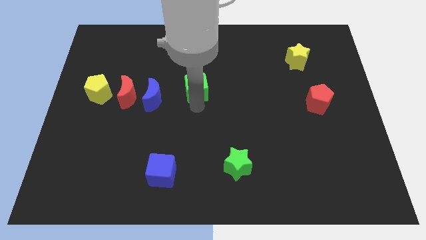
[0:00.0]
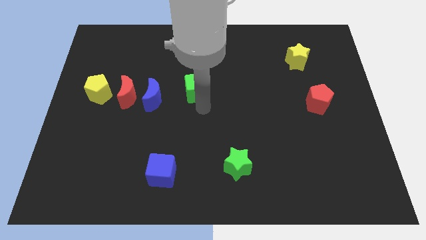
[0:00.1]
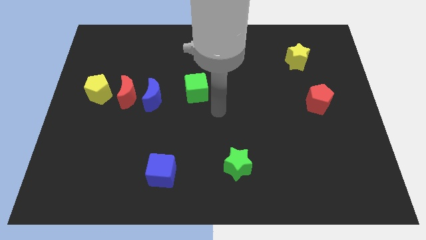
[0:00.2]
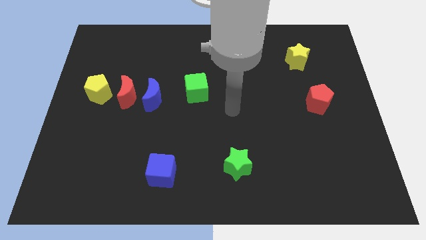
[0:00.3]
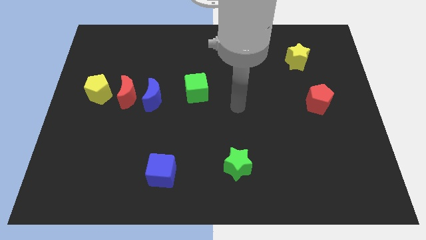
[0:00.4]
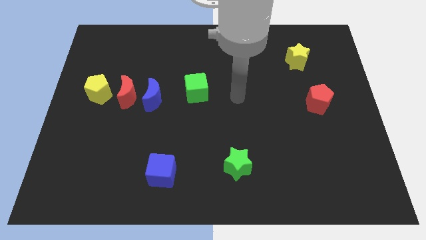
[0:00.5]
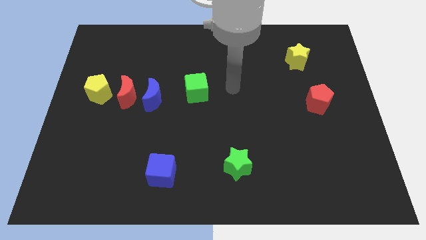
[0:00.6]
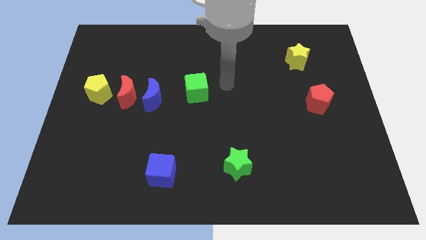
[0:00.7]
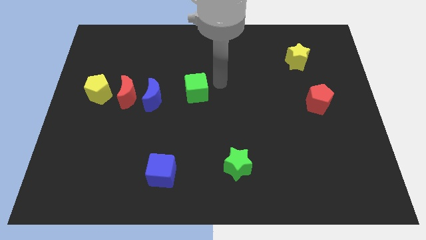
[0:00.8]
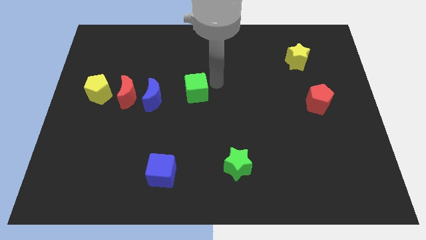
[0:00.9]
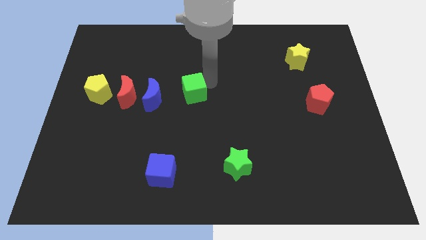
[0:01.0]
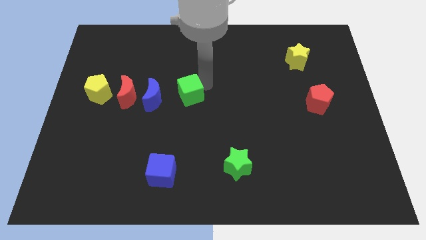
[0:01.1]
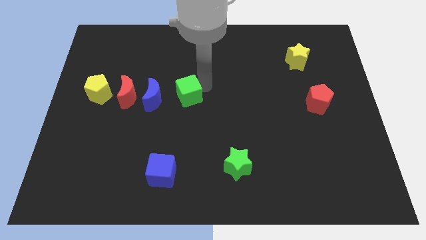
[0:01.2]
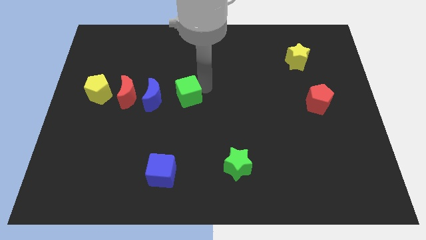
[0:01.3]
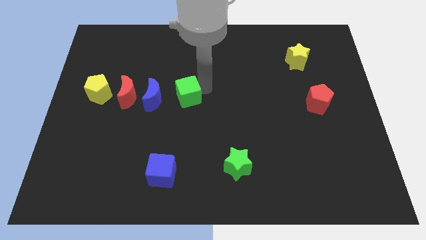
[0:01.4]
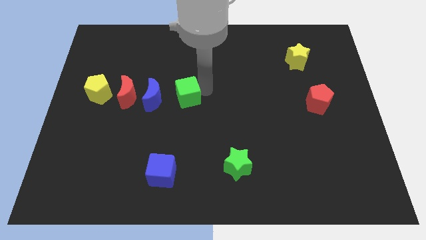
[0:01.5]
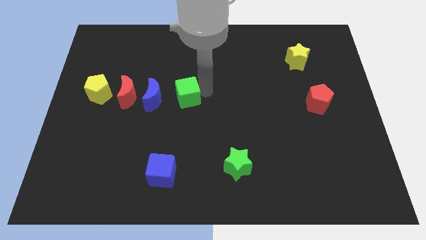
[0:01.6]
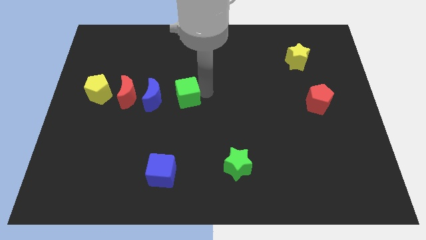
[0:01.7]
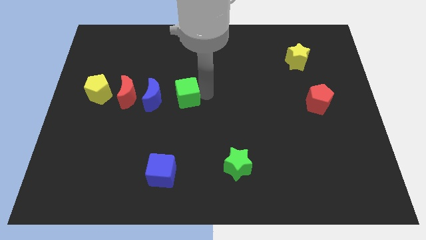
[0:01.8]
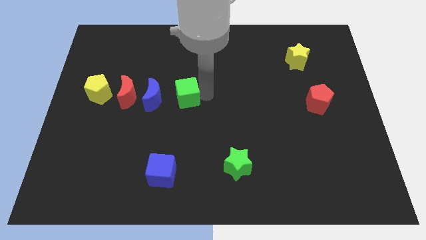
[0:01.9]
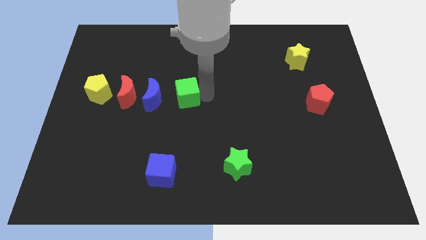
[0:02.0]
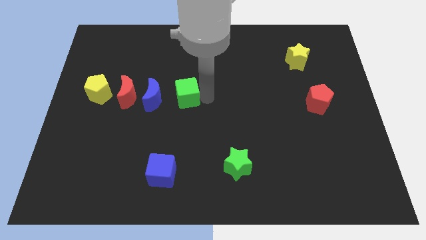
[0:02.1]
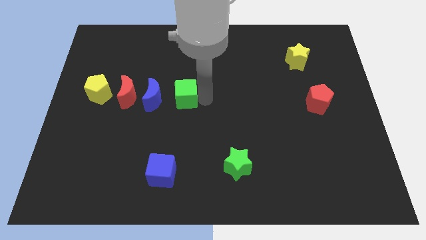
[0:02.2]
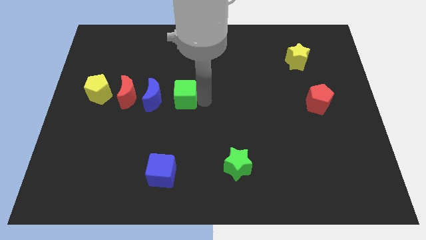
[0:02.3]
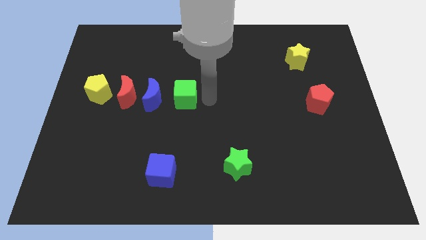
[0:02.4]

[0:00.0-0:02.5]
place green cube to the right of blue crescent

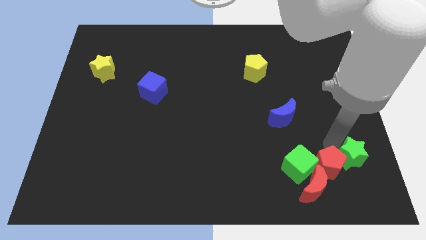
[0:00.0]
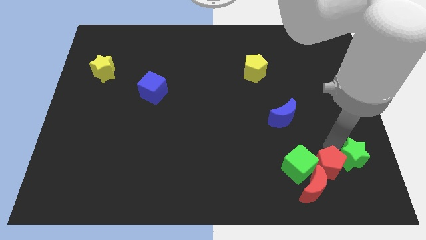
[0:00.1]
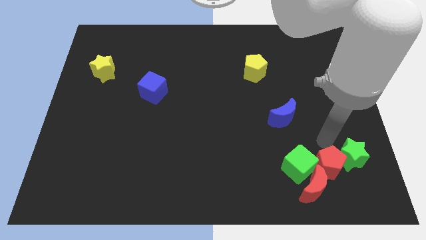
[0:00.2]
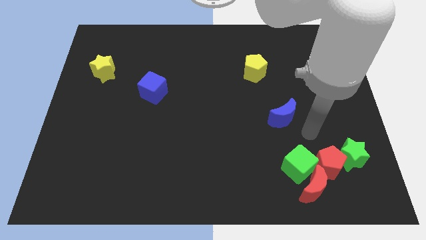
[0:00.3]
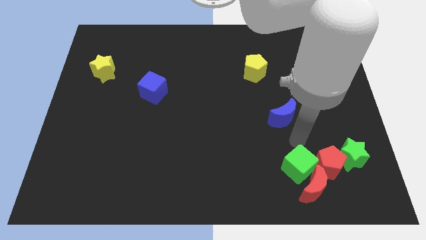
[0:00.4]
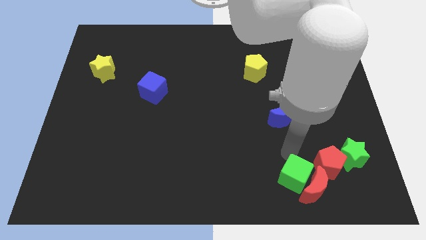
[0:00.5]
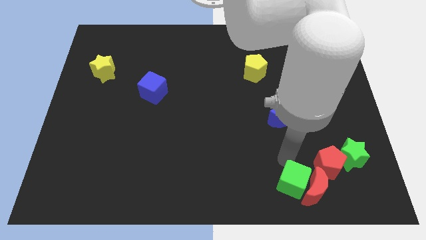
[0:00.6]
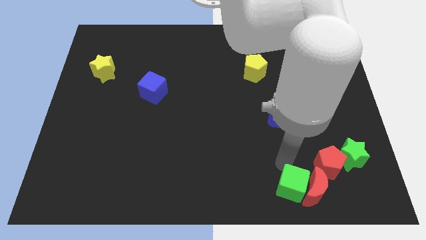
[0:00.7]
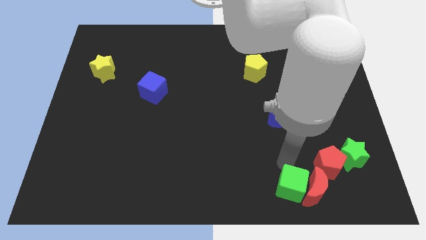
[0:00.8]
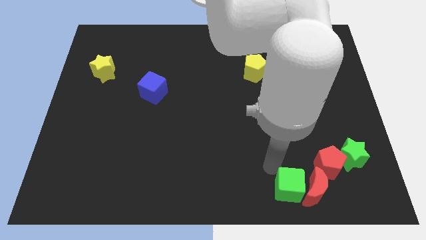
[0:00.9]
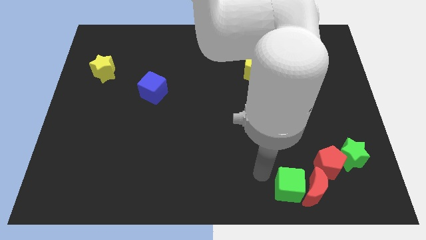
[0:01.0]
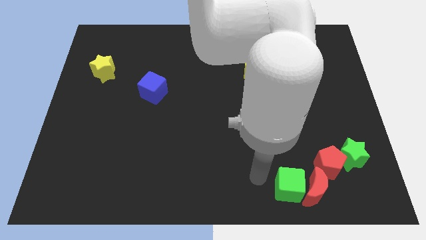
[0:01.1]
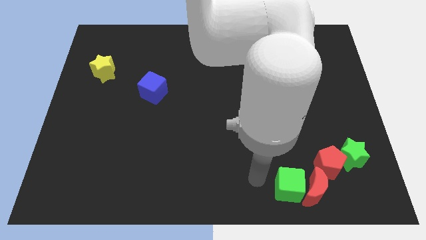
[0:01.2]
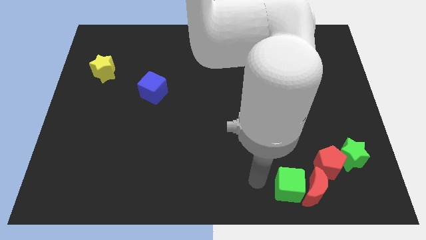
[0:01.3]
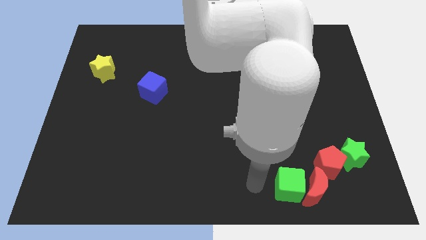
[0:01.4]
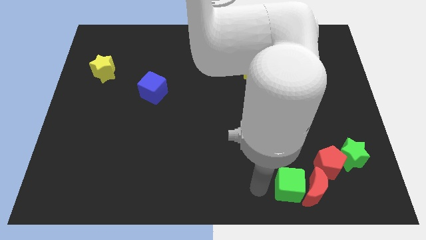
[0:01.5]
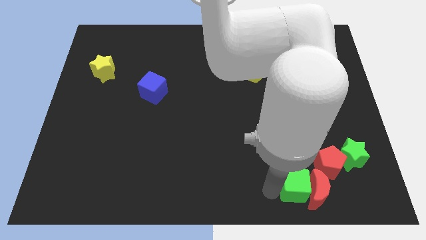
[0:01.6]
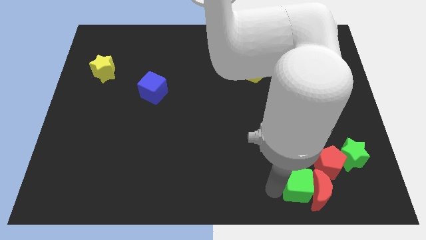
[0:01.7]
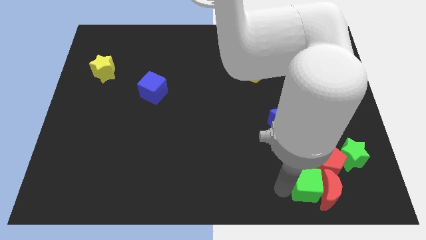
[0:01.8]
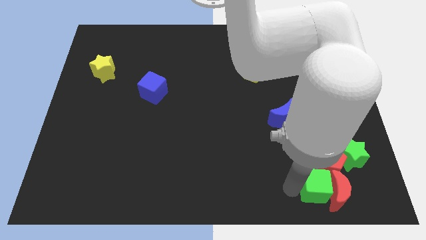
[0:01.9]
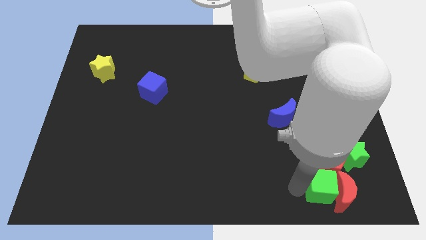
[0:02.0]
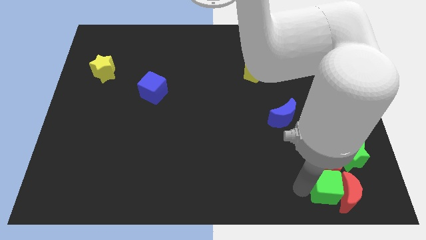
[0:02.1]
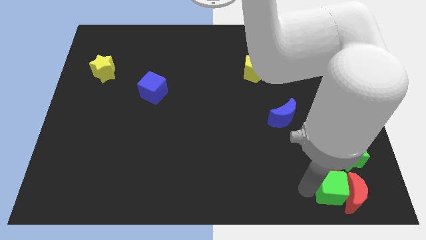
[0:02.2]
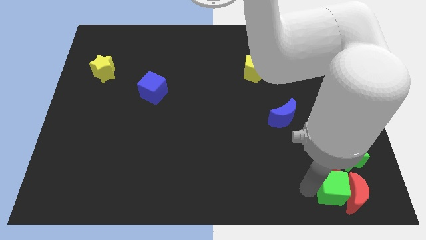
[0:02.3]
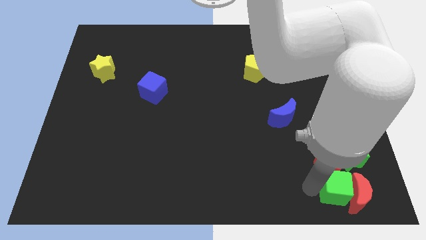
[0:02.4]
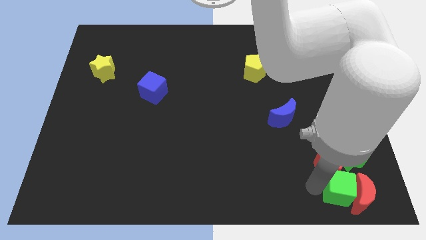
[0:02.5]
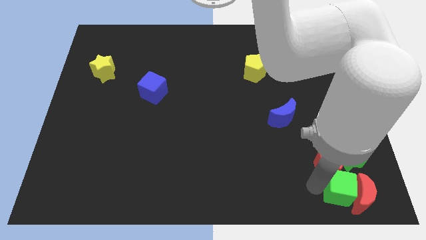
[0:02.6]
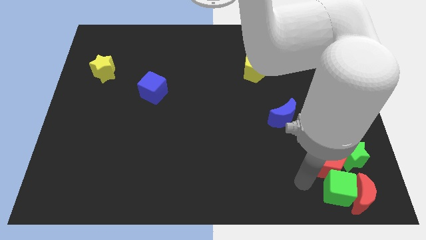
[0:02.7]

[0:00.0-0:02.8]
put the green cube and red crescent below the red pentagon and green star

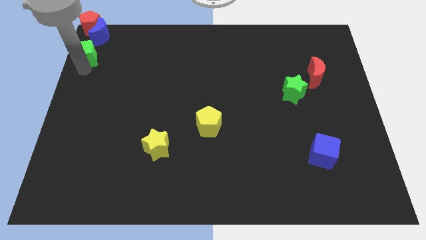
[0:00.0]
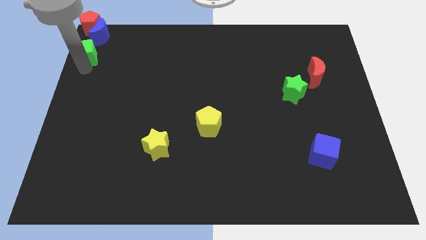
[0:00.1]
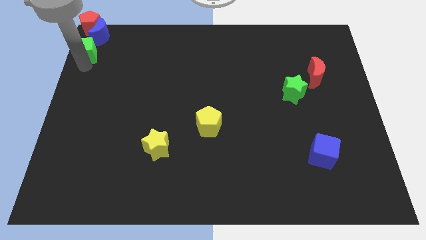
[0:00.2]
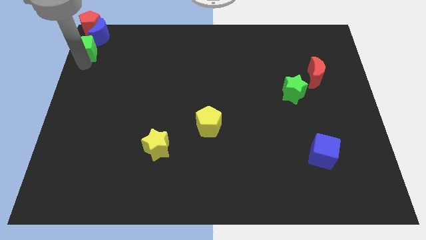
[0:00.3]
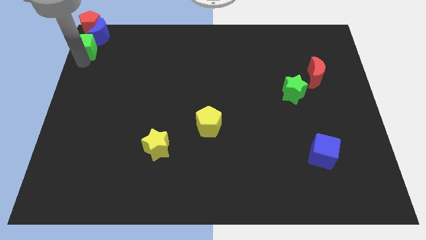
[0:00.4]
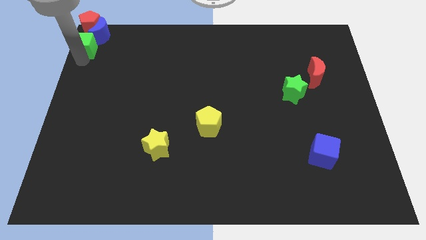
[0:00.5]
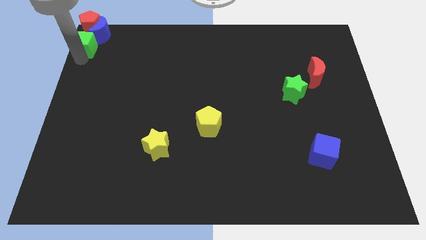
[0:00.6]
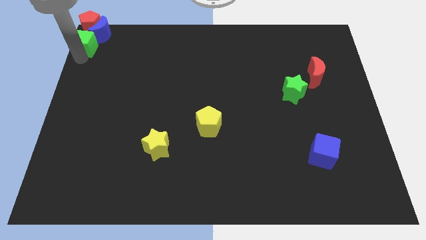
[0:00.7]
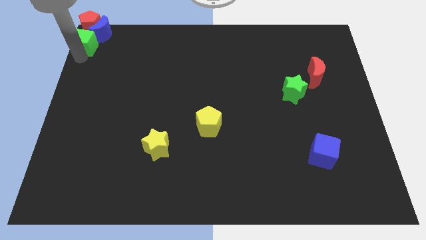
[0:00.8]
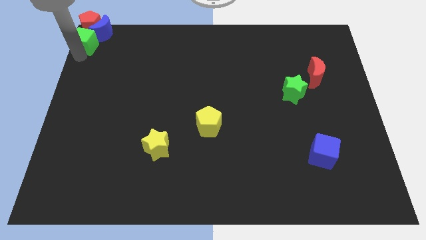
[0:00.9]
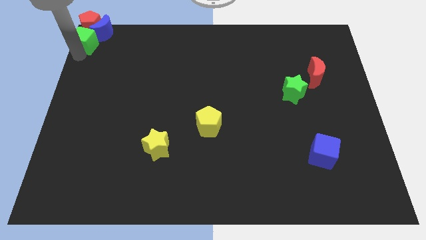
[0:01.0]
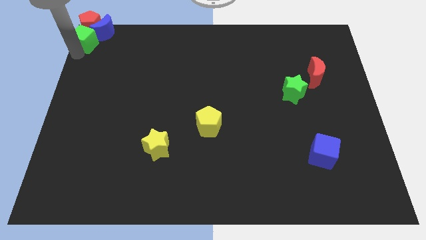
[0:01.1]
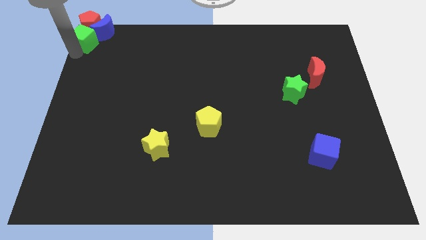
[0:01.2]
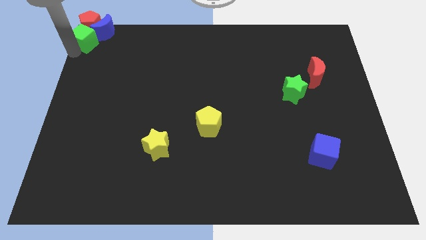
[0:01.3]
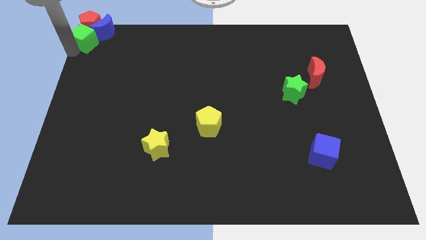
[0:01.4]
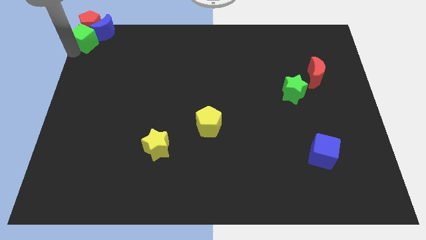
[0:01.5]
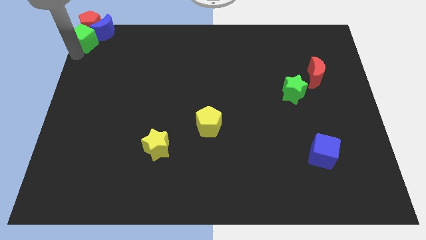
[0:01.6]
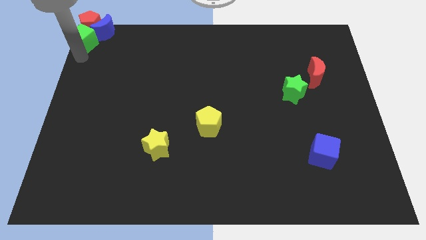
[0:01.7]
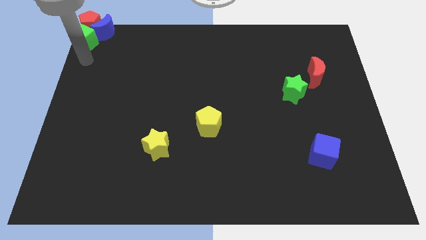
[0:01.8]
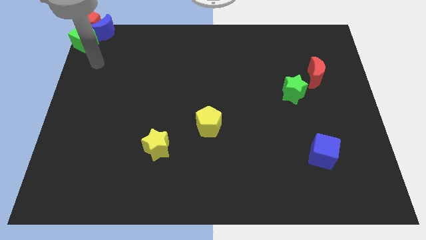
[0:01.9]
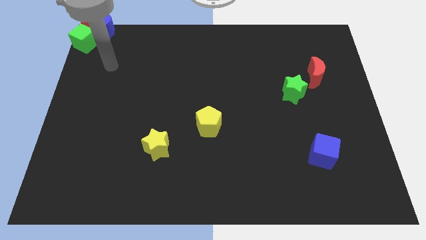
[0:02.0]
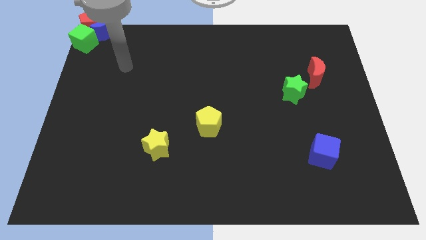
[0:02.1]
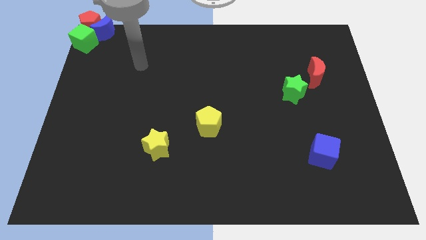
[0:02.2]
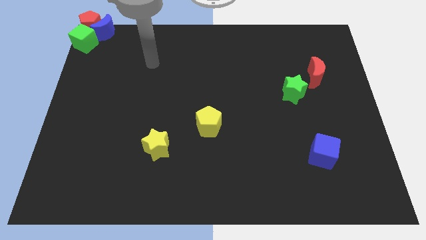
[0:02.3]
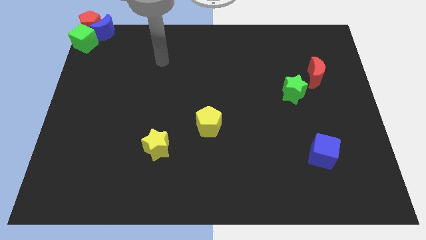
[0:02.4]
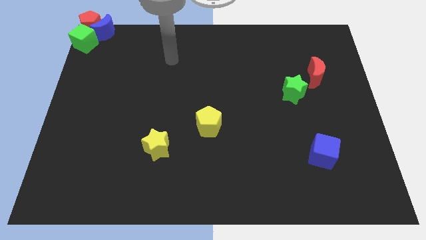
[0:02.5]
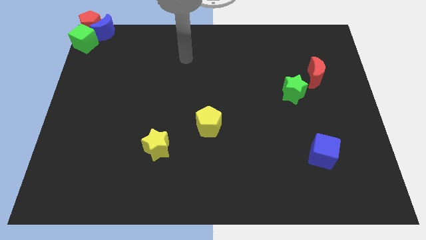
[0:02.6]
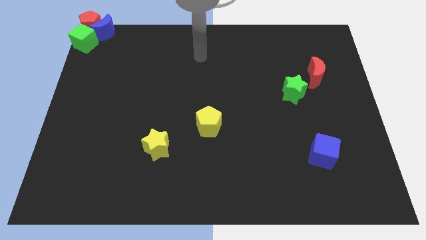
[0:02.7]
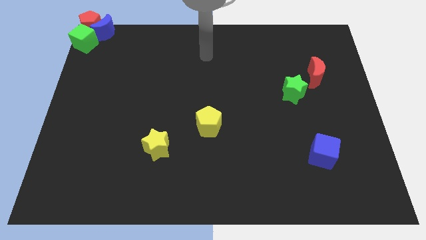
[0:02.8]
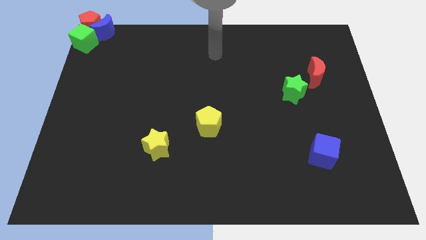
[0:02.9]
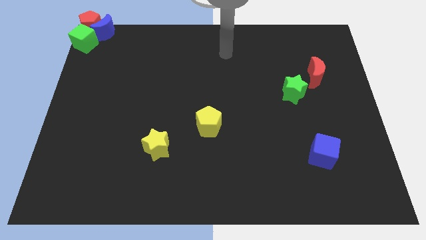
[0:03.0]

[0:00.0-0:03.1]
move the arm at the top center

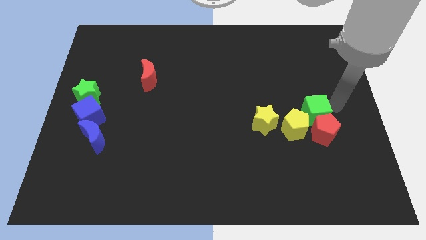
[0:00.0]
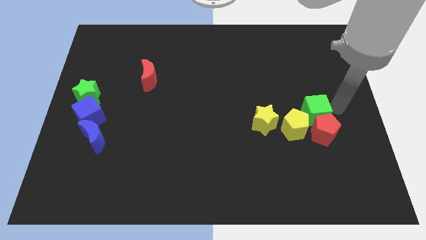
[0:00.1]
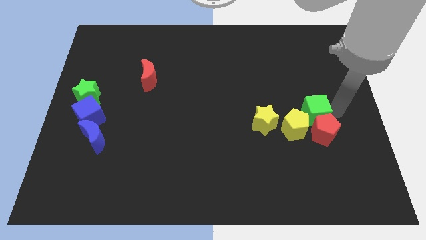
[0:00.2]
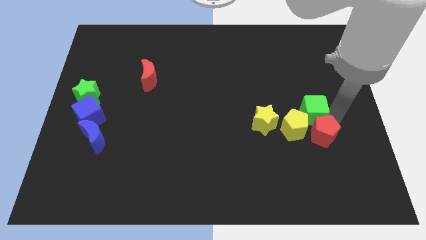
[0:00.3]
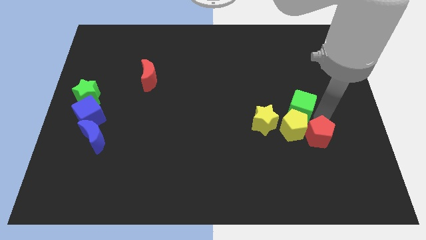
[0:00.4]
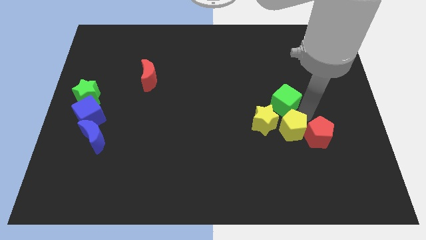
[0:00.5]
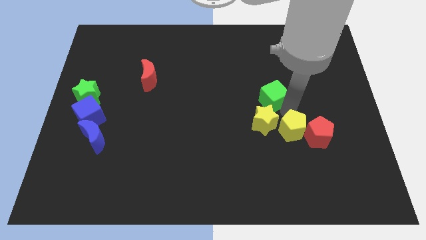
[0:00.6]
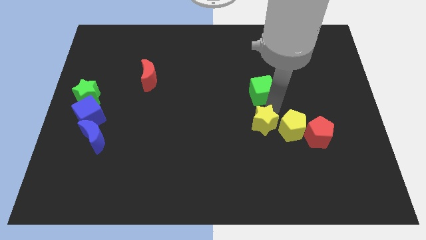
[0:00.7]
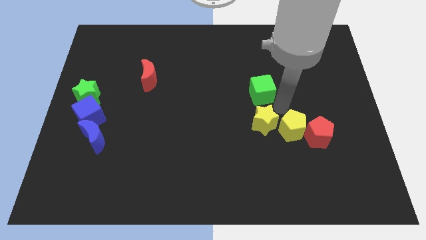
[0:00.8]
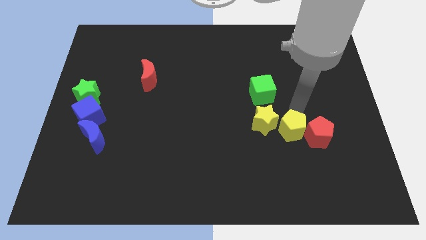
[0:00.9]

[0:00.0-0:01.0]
push the green cube to the top of the yellow star
